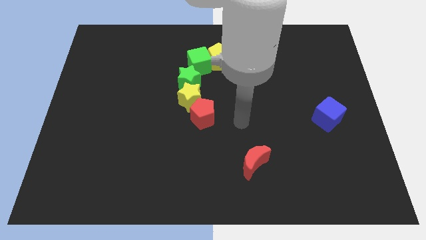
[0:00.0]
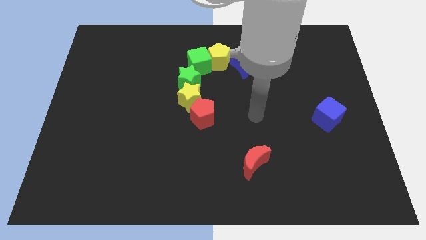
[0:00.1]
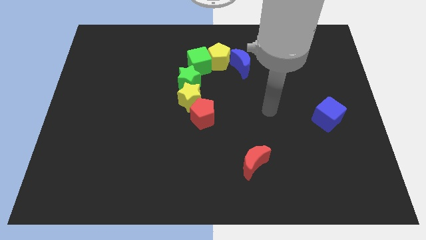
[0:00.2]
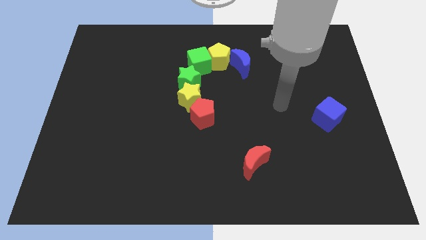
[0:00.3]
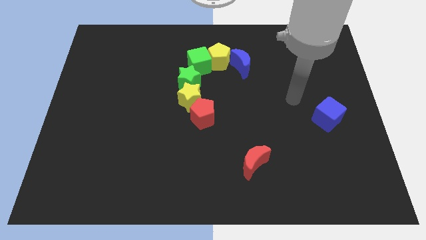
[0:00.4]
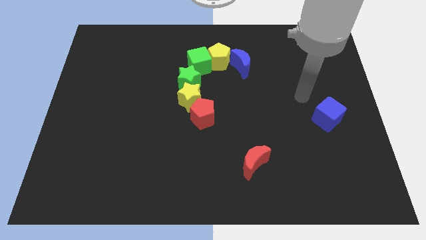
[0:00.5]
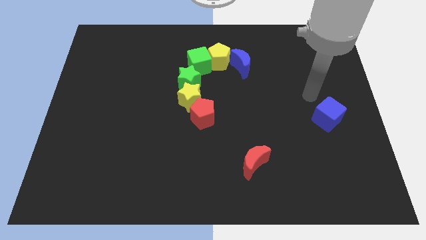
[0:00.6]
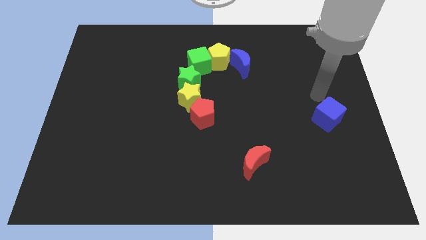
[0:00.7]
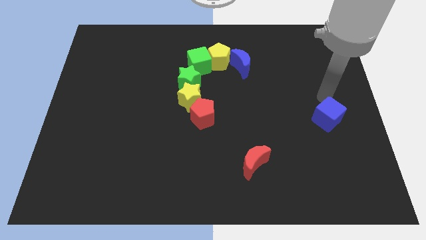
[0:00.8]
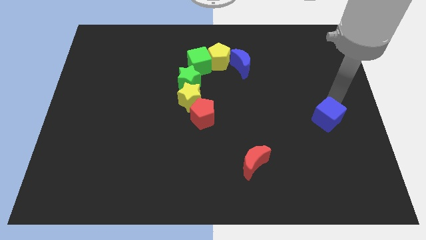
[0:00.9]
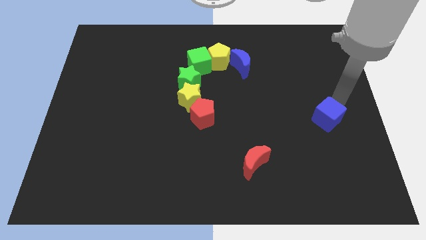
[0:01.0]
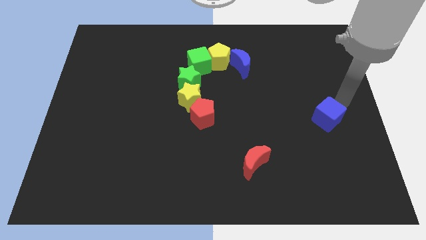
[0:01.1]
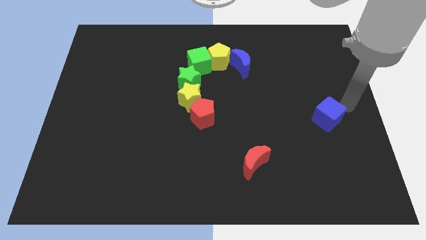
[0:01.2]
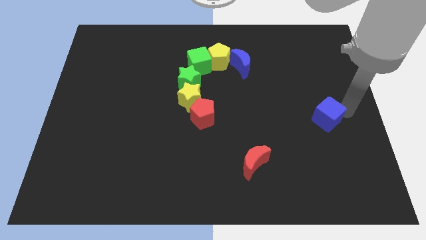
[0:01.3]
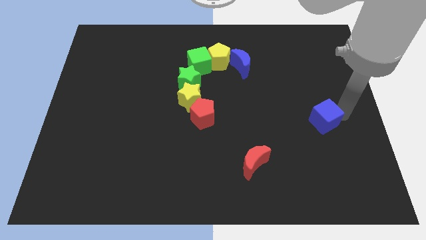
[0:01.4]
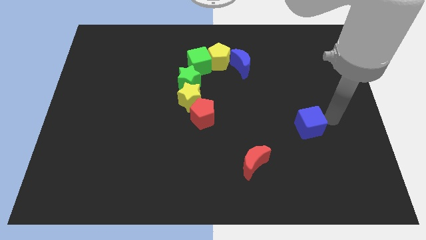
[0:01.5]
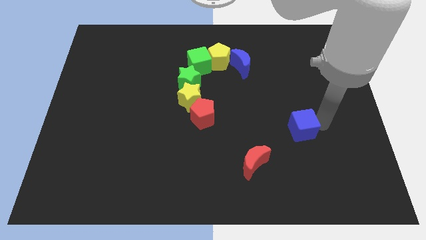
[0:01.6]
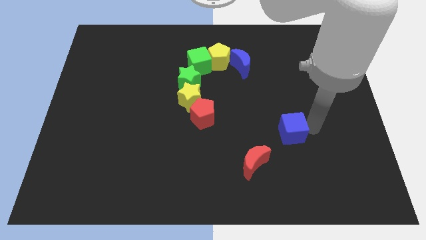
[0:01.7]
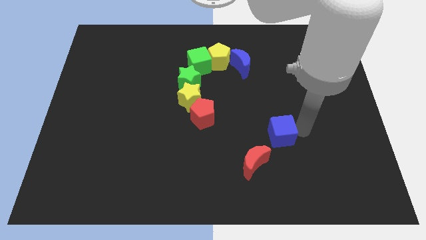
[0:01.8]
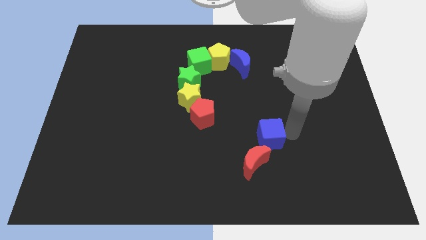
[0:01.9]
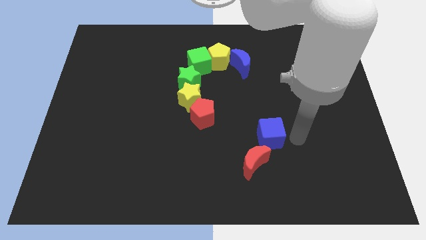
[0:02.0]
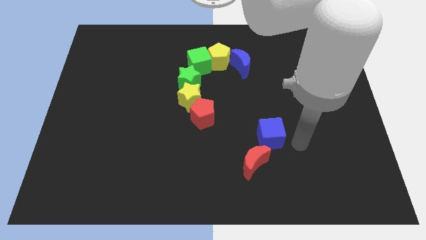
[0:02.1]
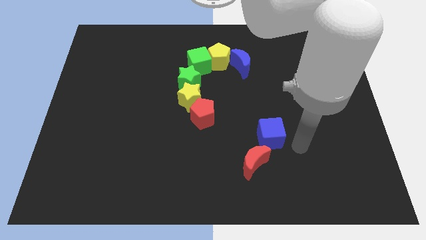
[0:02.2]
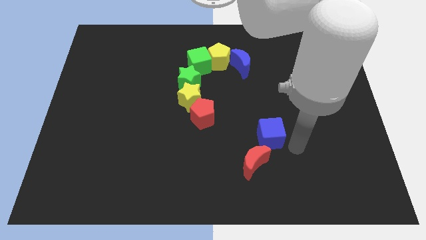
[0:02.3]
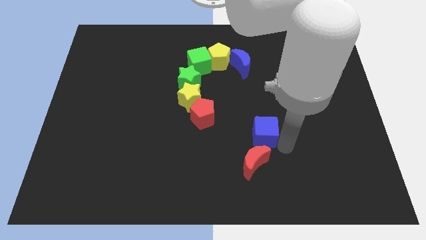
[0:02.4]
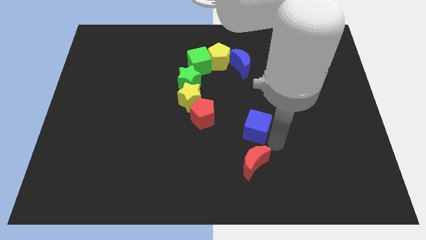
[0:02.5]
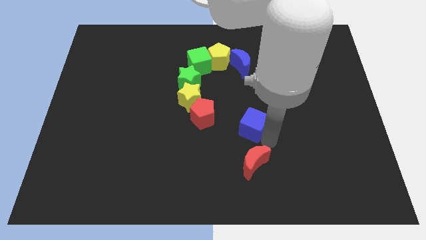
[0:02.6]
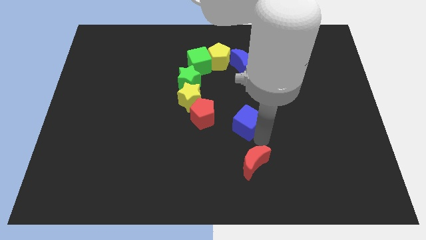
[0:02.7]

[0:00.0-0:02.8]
place the blue cube above the red crescent

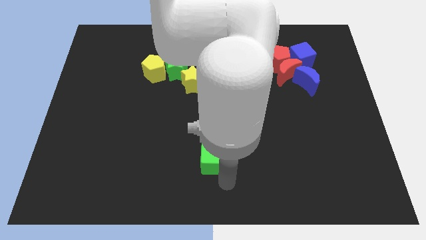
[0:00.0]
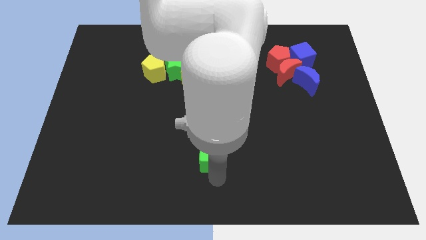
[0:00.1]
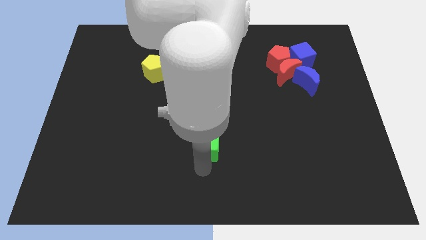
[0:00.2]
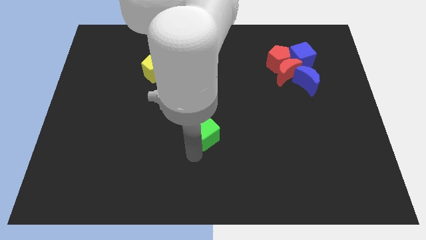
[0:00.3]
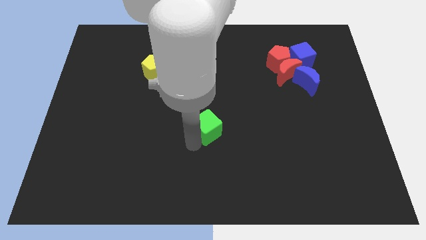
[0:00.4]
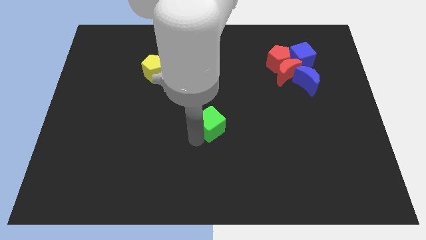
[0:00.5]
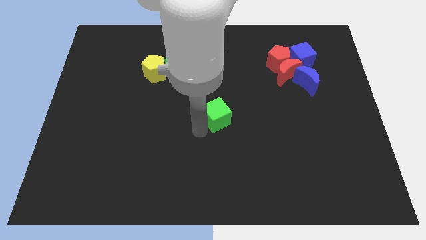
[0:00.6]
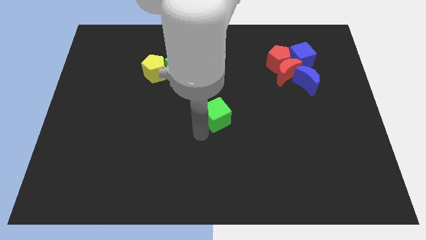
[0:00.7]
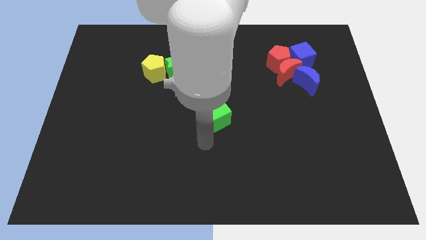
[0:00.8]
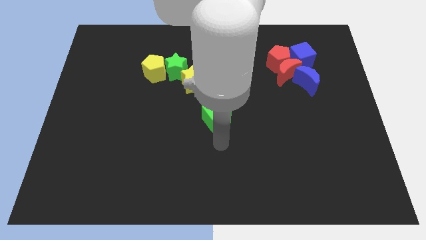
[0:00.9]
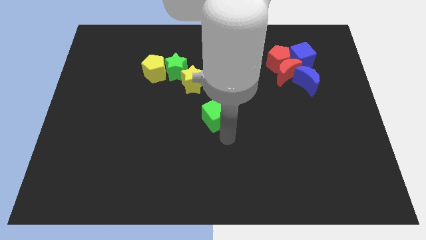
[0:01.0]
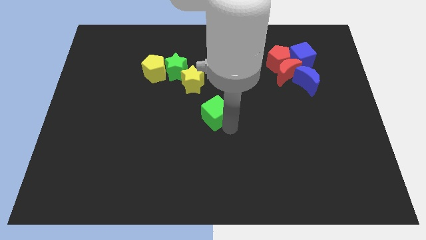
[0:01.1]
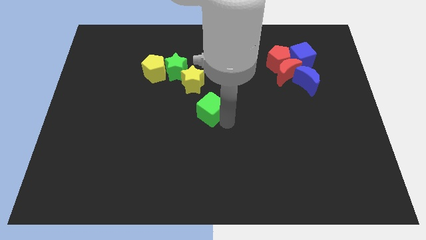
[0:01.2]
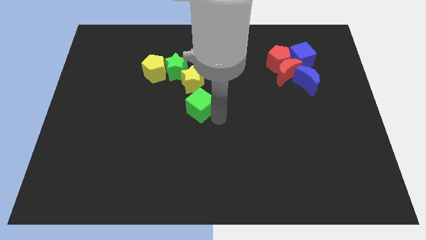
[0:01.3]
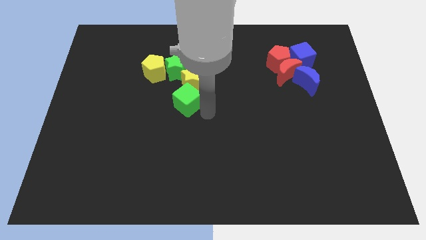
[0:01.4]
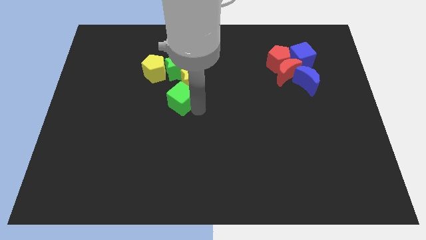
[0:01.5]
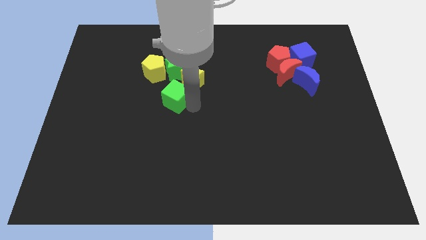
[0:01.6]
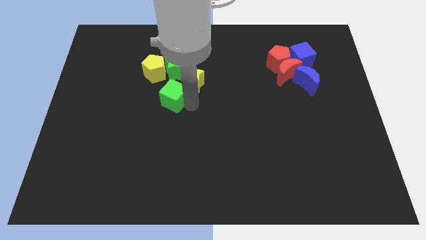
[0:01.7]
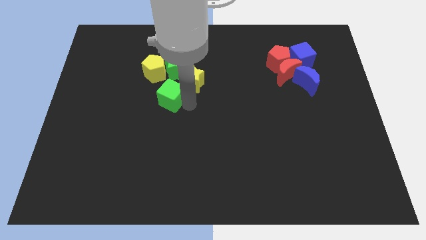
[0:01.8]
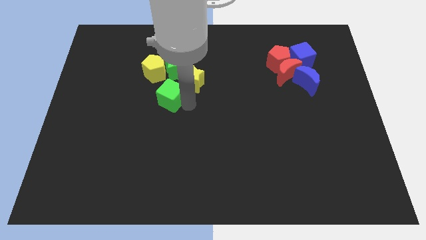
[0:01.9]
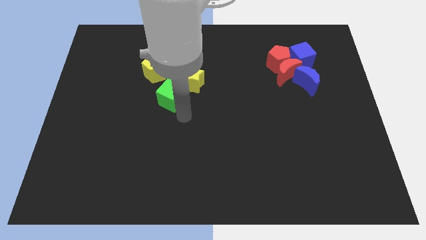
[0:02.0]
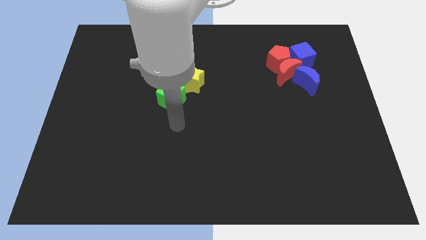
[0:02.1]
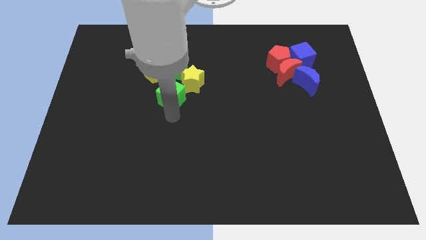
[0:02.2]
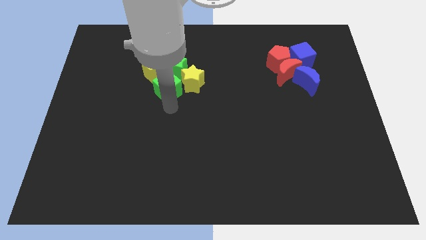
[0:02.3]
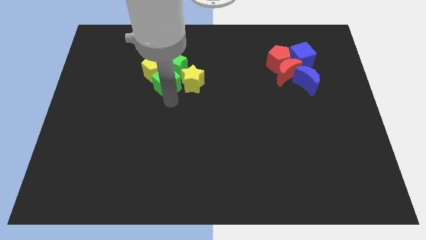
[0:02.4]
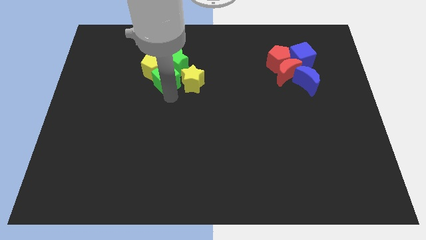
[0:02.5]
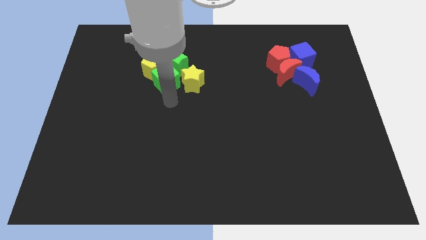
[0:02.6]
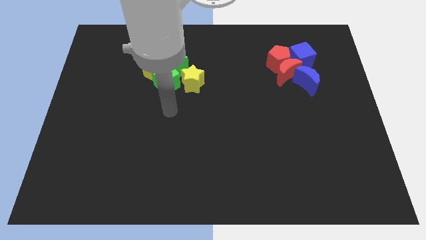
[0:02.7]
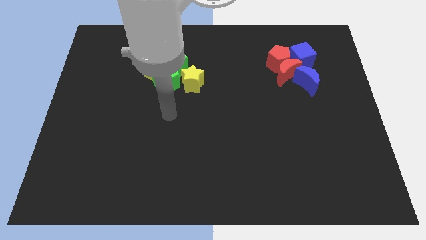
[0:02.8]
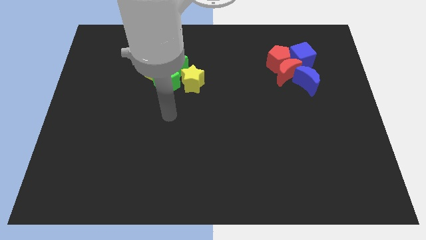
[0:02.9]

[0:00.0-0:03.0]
place green cube below green star

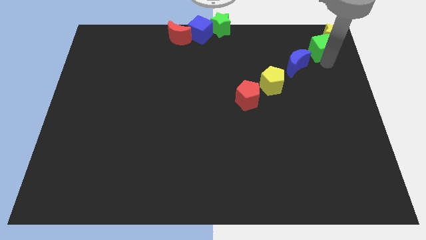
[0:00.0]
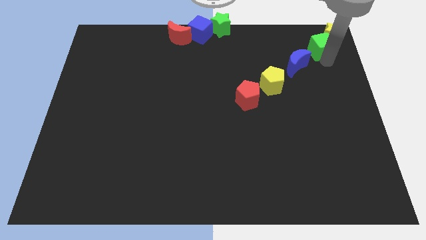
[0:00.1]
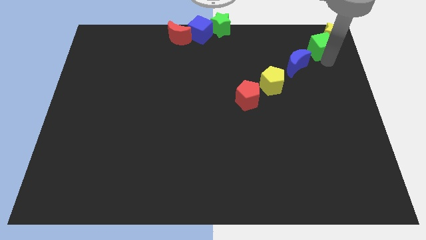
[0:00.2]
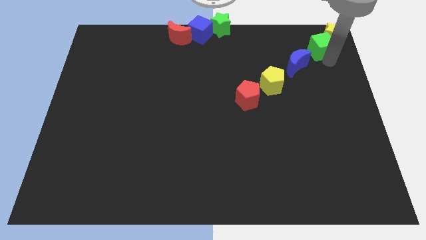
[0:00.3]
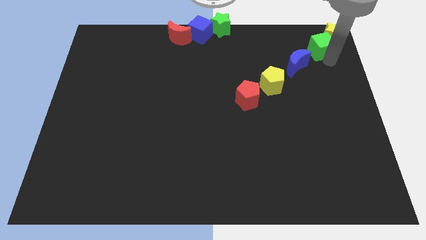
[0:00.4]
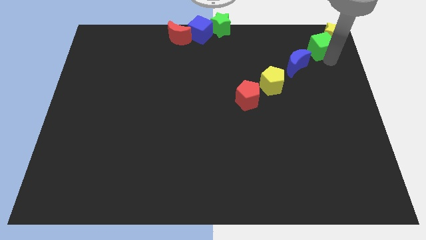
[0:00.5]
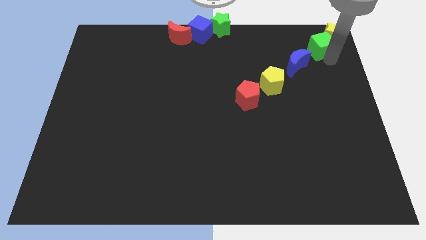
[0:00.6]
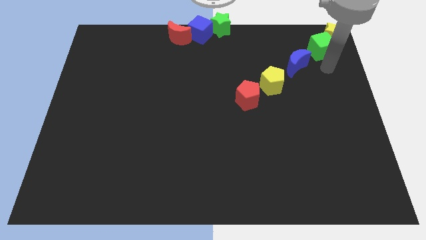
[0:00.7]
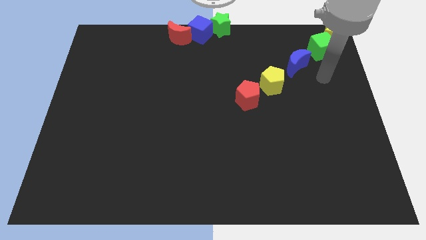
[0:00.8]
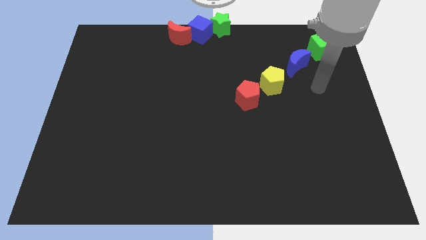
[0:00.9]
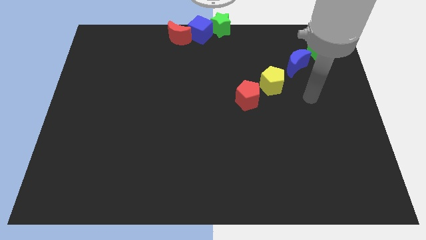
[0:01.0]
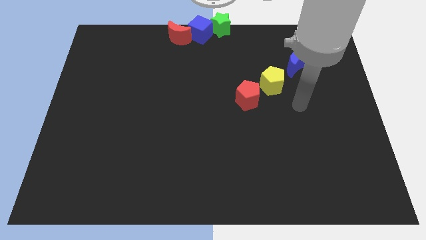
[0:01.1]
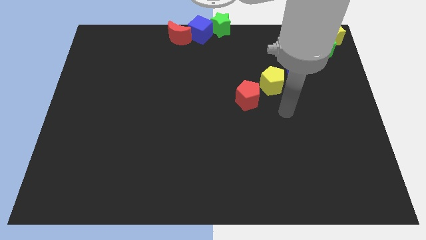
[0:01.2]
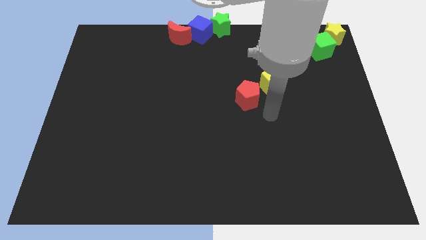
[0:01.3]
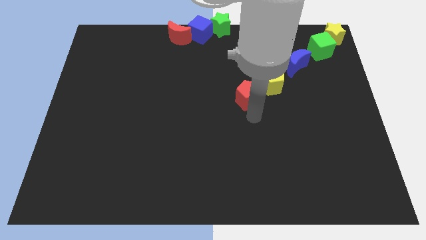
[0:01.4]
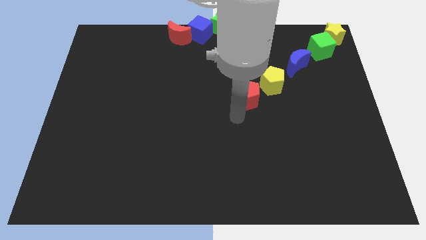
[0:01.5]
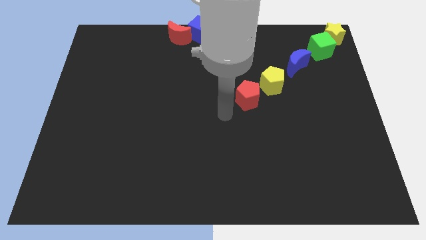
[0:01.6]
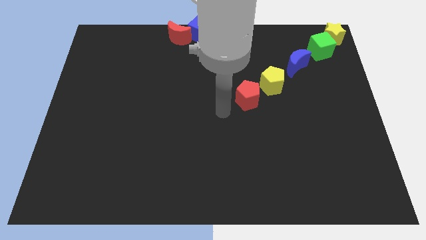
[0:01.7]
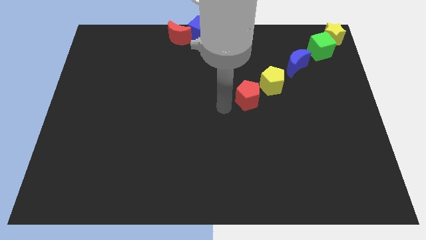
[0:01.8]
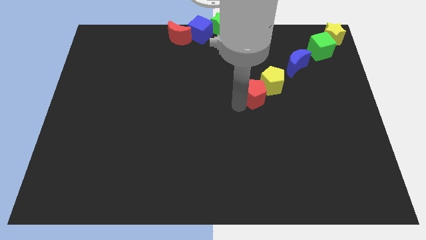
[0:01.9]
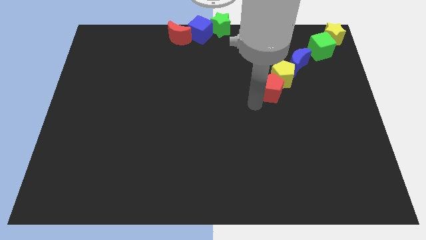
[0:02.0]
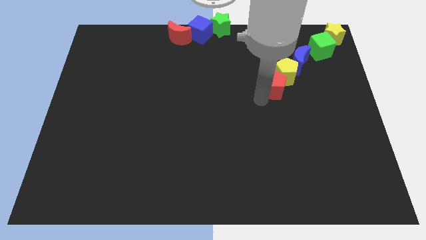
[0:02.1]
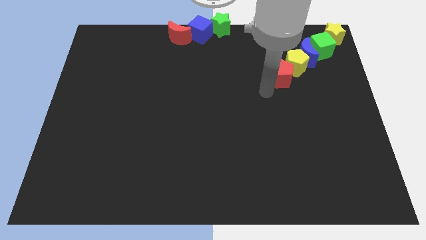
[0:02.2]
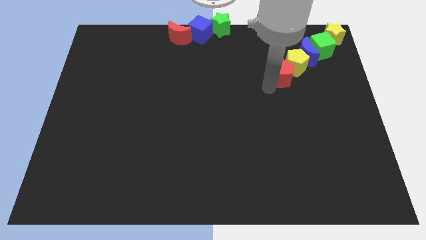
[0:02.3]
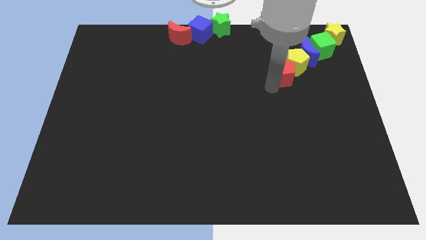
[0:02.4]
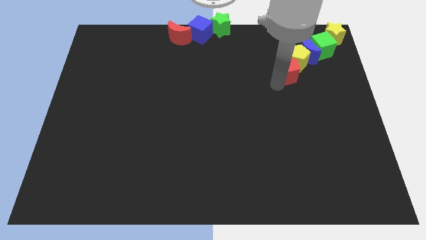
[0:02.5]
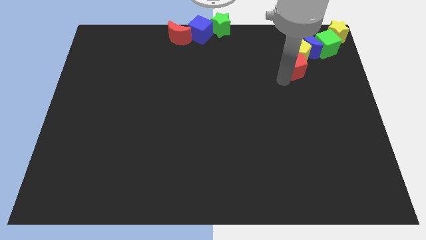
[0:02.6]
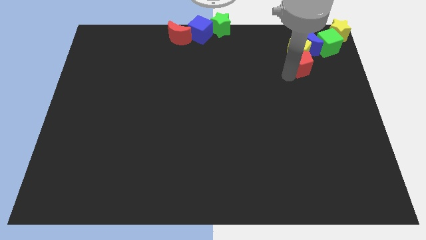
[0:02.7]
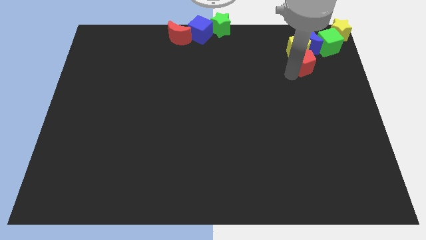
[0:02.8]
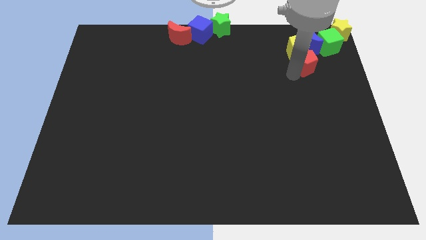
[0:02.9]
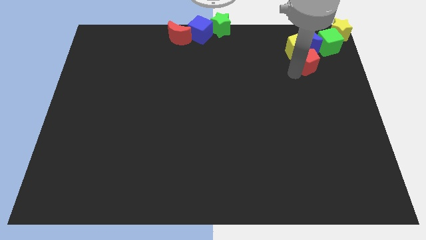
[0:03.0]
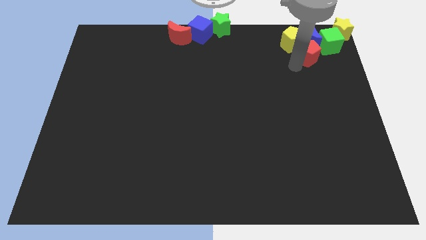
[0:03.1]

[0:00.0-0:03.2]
place red pentagon below yellow pentagon

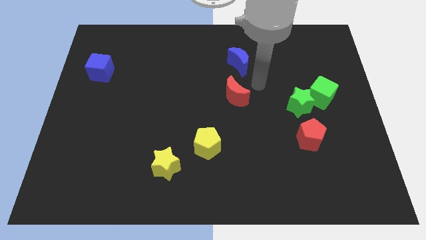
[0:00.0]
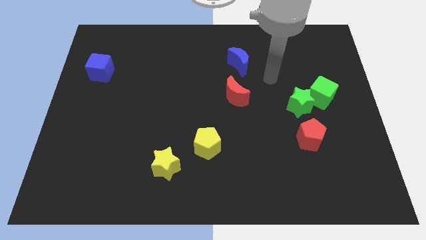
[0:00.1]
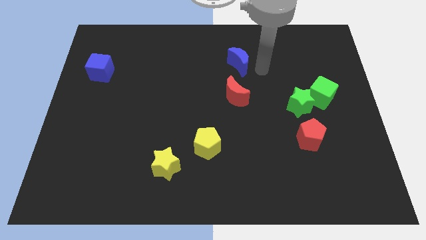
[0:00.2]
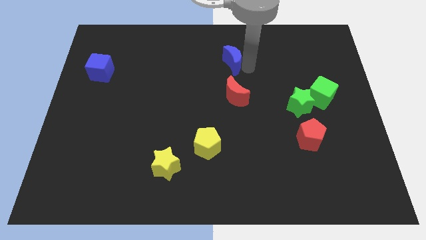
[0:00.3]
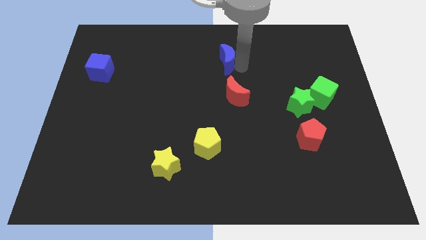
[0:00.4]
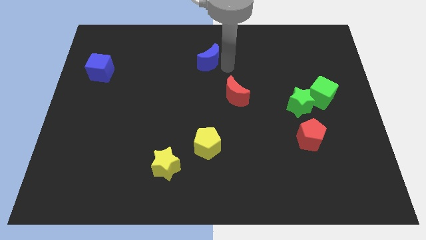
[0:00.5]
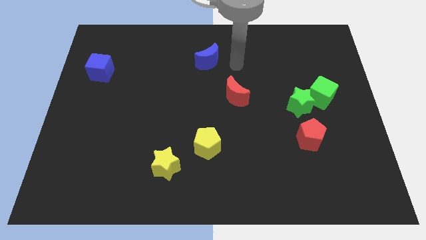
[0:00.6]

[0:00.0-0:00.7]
place the blue crescent on top of red crescent
